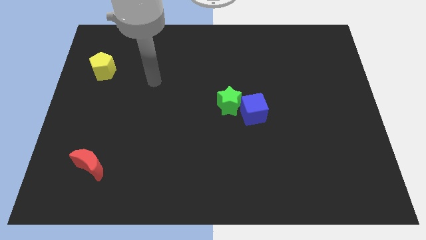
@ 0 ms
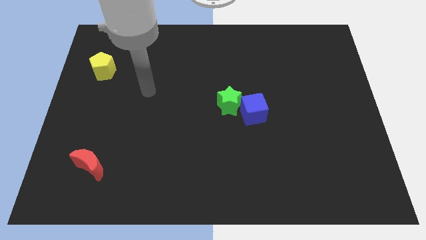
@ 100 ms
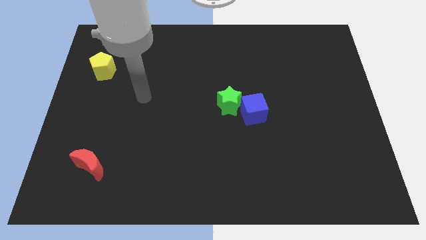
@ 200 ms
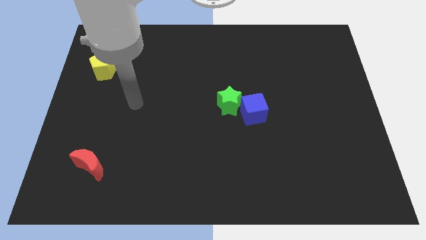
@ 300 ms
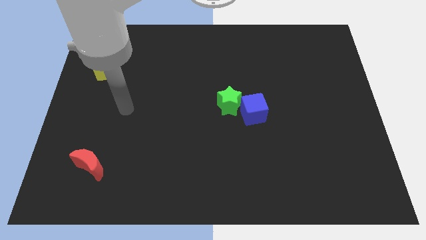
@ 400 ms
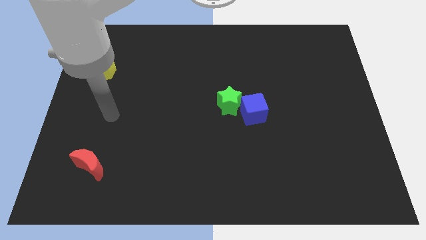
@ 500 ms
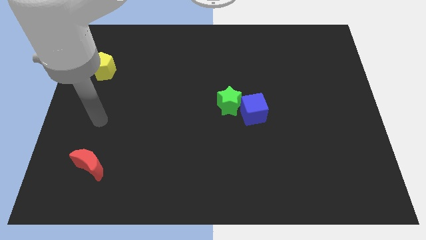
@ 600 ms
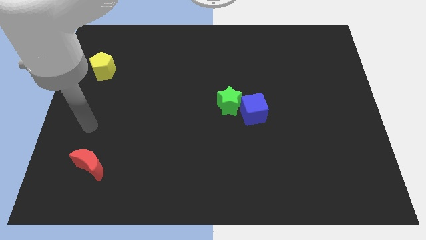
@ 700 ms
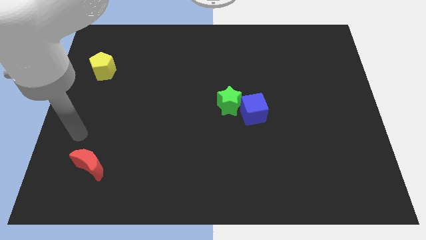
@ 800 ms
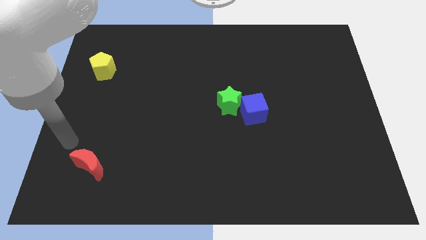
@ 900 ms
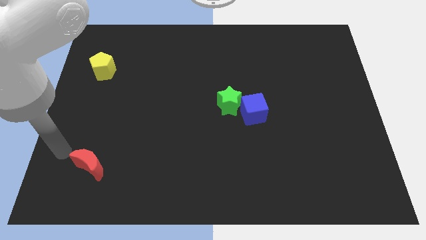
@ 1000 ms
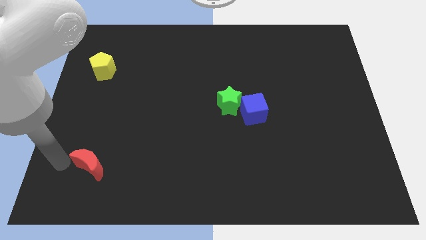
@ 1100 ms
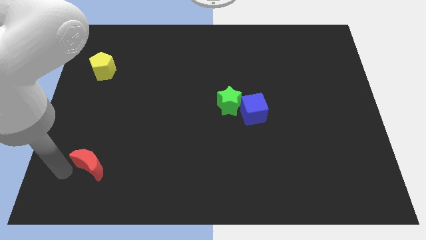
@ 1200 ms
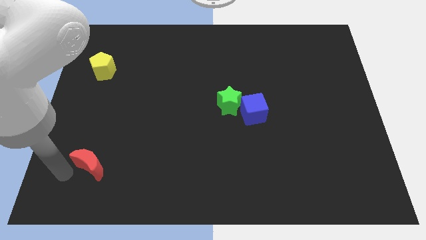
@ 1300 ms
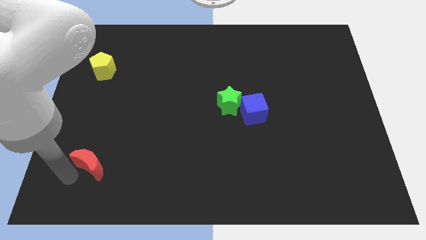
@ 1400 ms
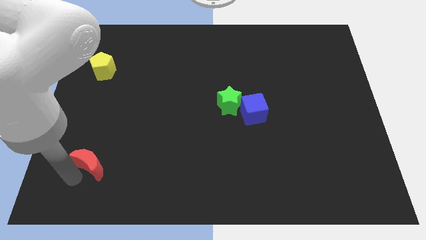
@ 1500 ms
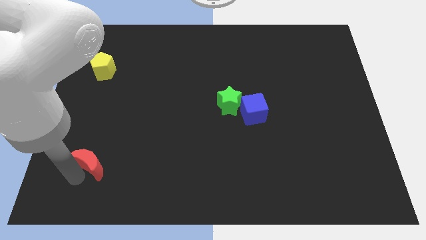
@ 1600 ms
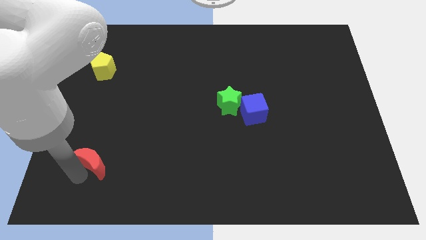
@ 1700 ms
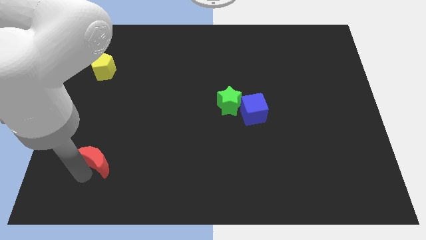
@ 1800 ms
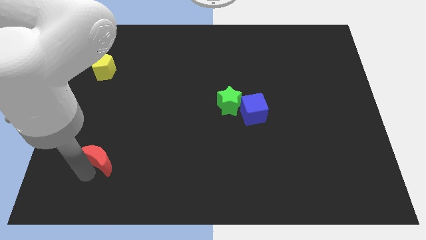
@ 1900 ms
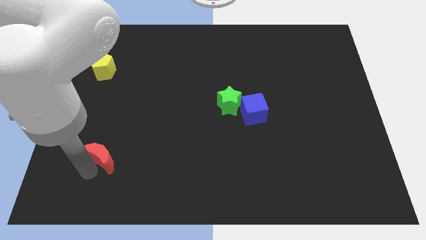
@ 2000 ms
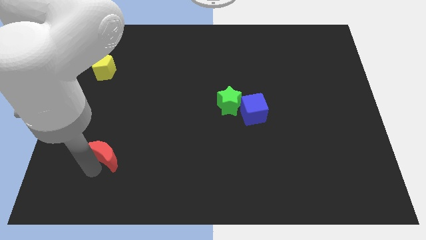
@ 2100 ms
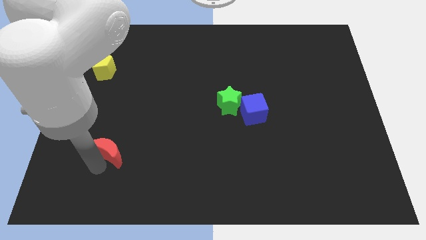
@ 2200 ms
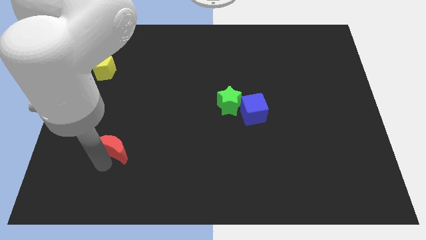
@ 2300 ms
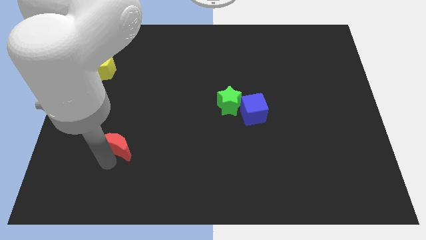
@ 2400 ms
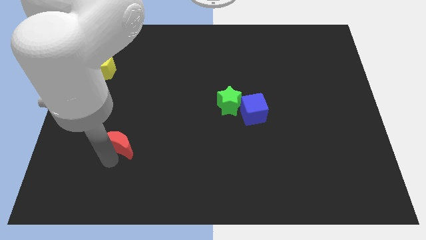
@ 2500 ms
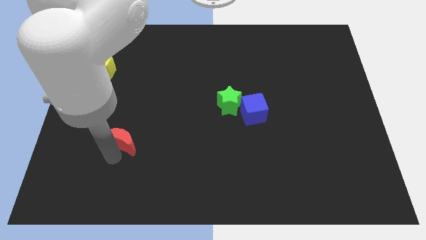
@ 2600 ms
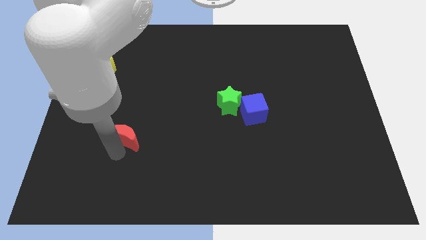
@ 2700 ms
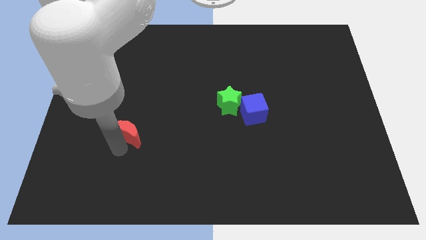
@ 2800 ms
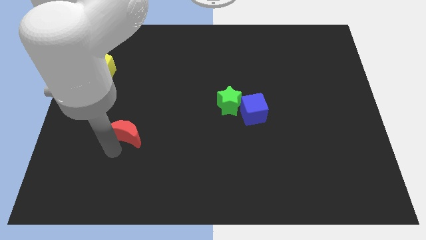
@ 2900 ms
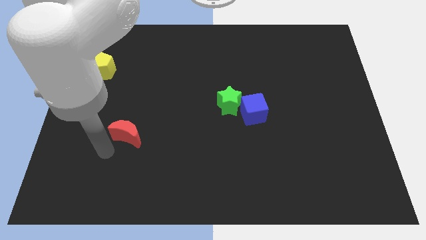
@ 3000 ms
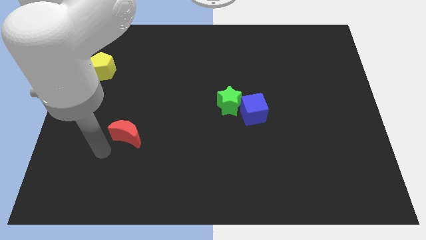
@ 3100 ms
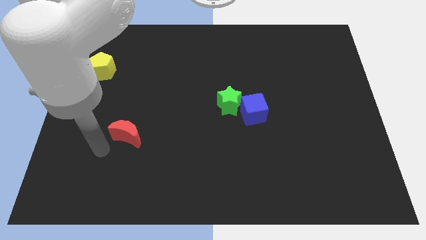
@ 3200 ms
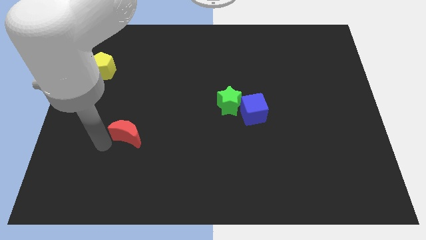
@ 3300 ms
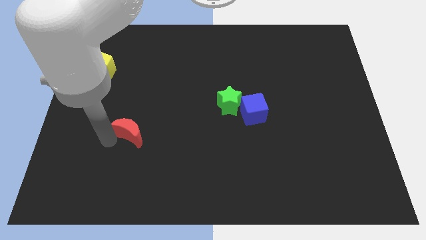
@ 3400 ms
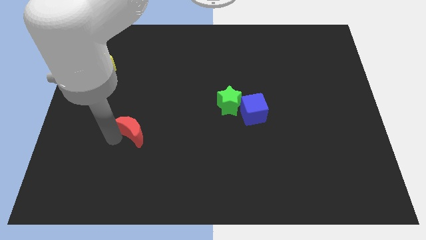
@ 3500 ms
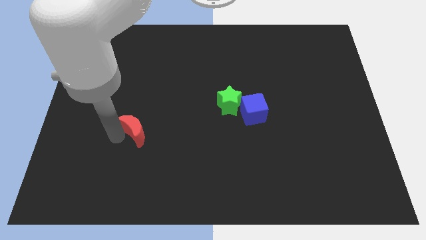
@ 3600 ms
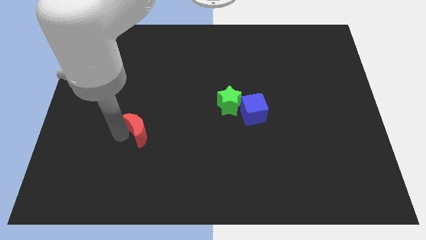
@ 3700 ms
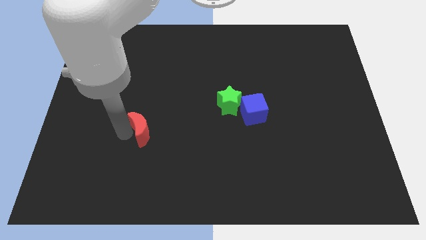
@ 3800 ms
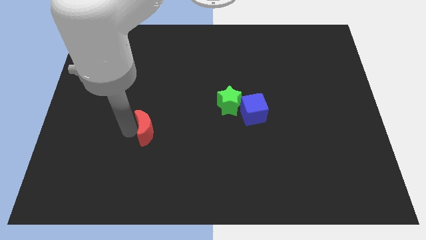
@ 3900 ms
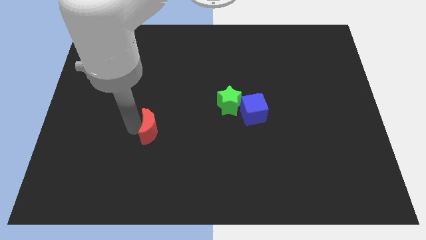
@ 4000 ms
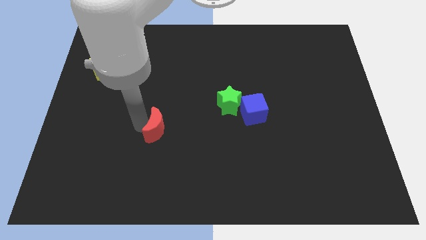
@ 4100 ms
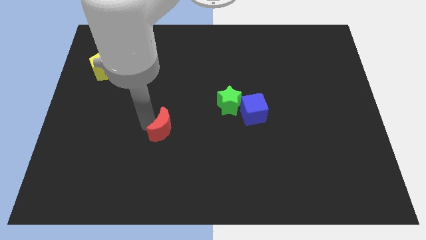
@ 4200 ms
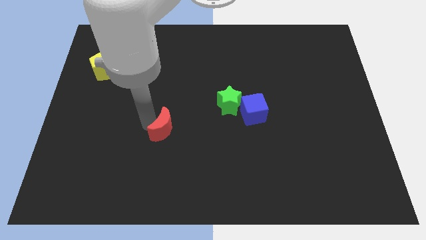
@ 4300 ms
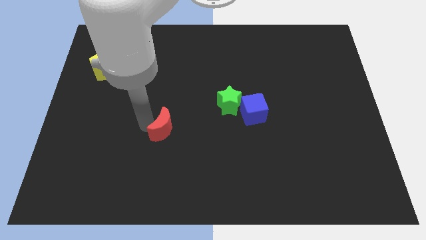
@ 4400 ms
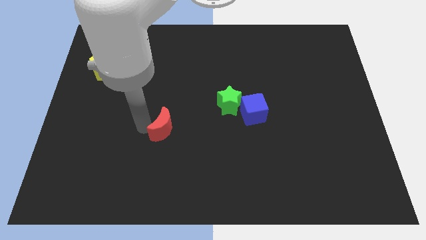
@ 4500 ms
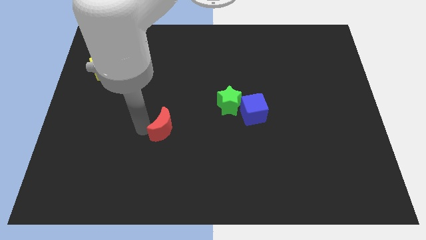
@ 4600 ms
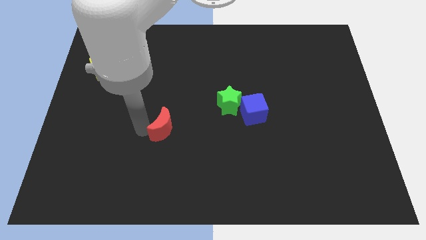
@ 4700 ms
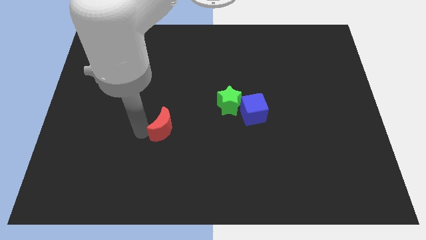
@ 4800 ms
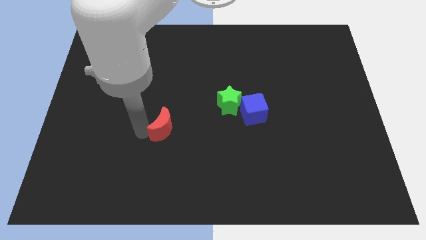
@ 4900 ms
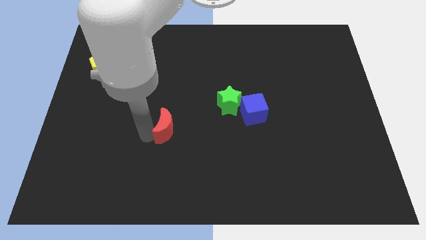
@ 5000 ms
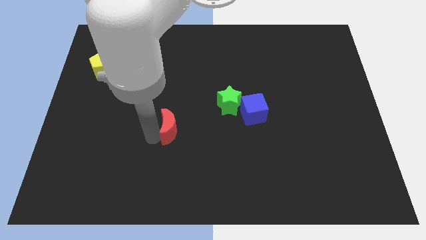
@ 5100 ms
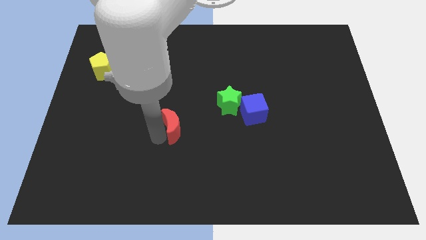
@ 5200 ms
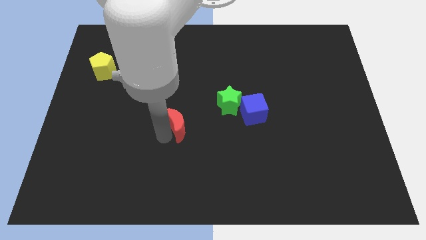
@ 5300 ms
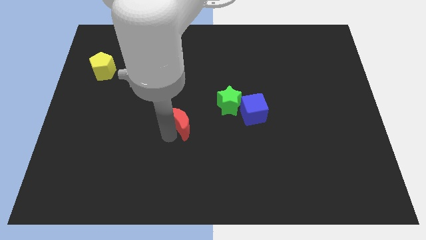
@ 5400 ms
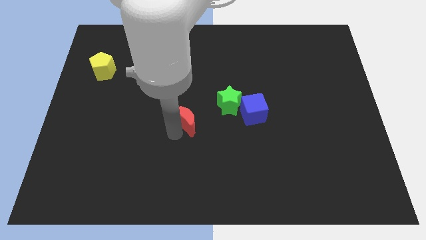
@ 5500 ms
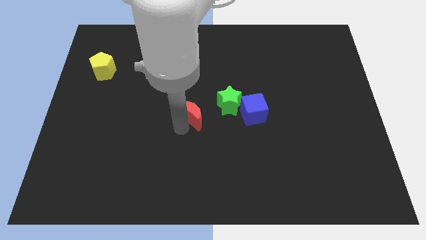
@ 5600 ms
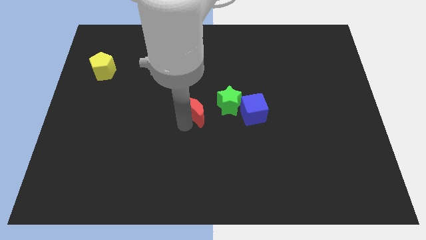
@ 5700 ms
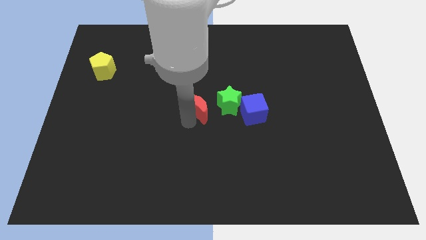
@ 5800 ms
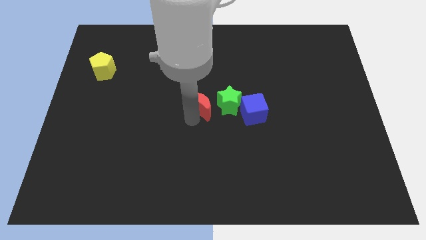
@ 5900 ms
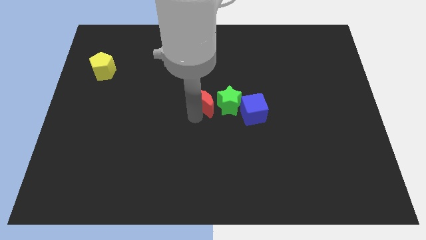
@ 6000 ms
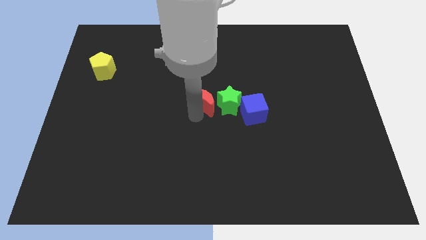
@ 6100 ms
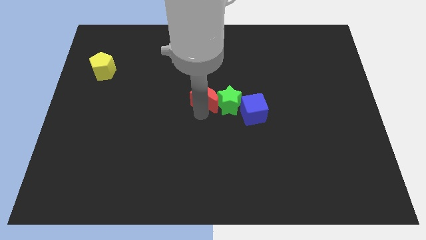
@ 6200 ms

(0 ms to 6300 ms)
push the red moon to the green star

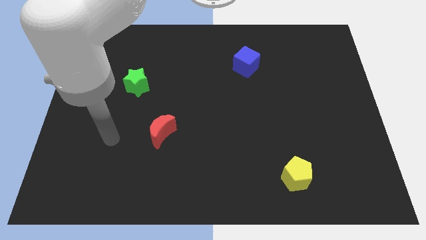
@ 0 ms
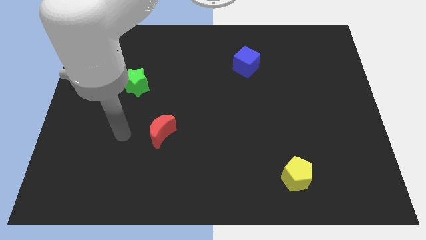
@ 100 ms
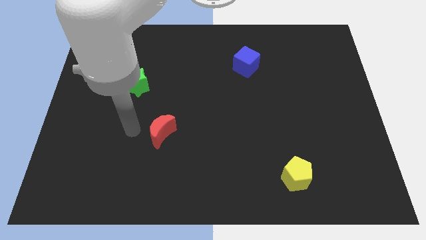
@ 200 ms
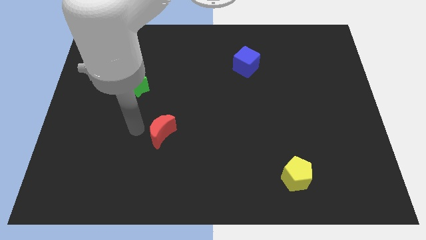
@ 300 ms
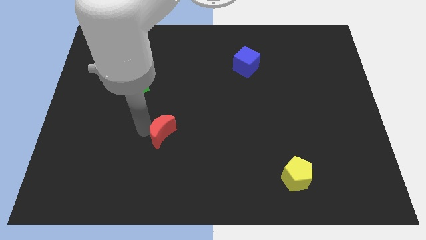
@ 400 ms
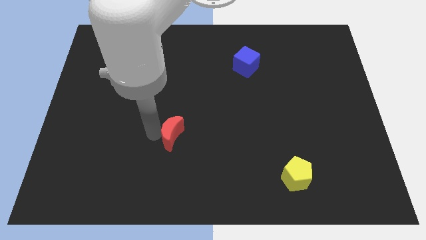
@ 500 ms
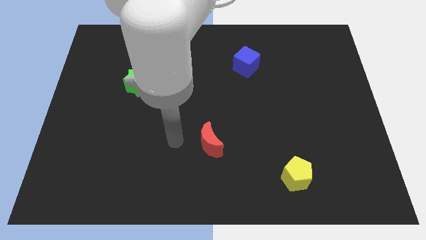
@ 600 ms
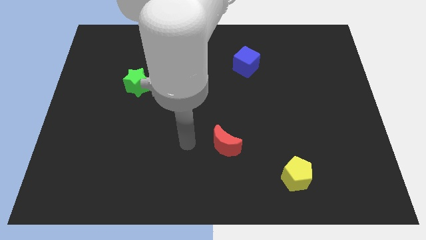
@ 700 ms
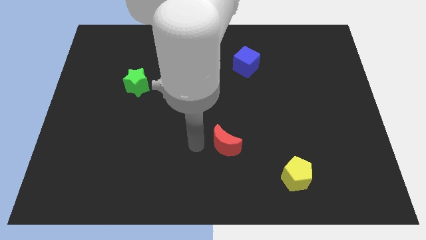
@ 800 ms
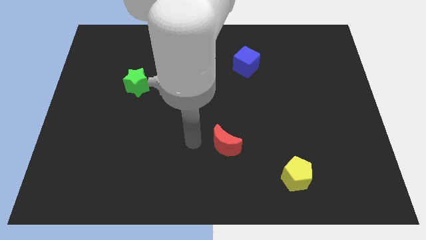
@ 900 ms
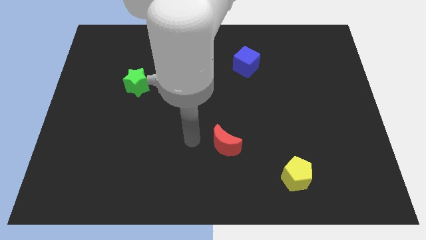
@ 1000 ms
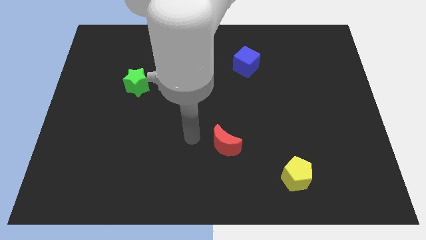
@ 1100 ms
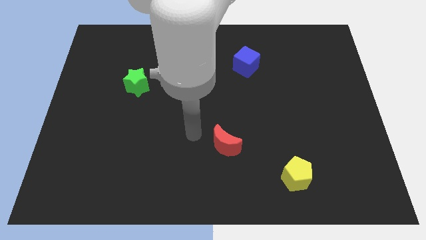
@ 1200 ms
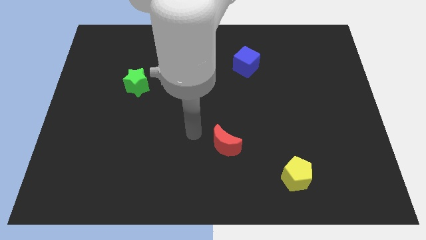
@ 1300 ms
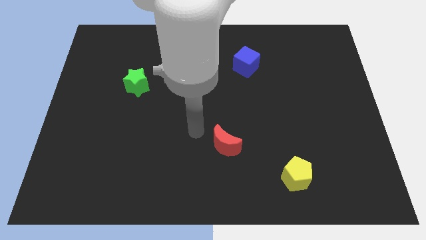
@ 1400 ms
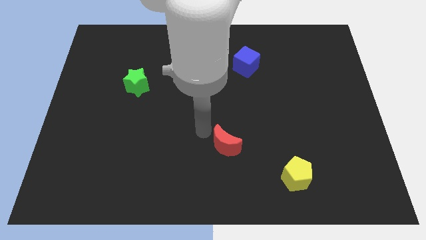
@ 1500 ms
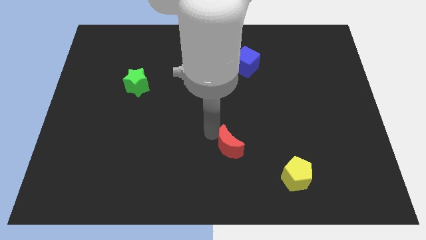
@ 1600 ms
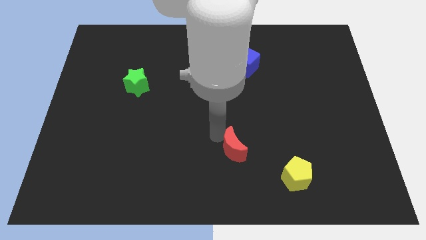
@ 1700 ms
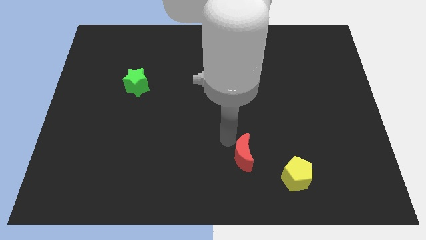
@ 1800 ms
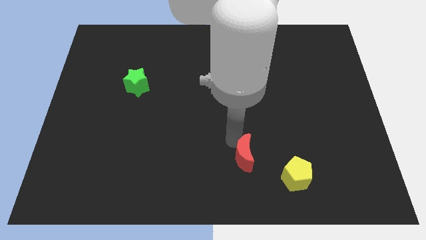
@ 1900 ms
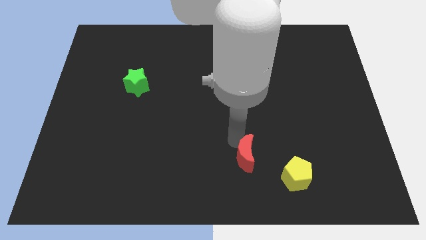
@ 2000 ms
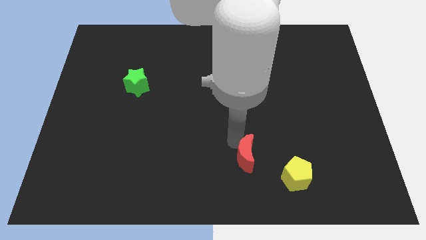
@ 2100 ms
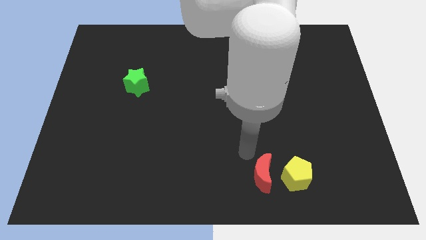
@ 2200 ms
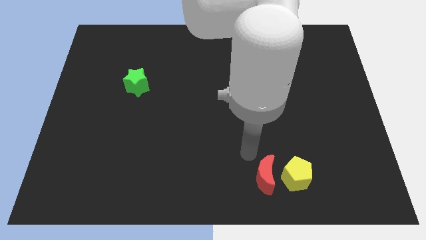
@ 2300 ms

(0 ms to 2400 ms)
slide the red block next to the yellow block
